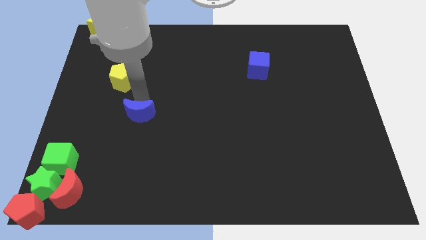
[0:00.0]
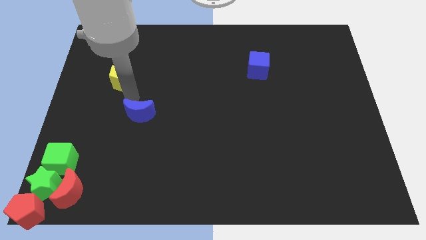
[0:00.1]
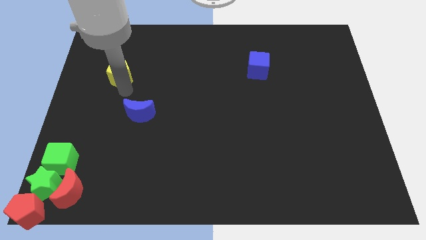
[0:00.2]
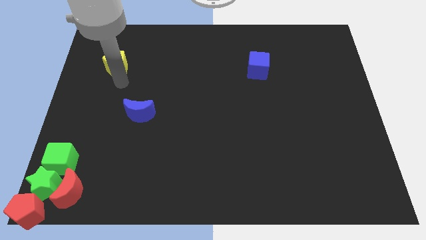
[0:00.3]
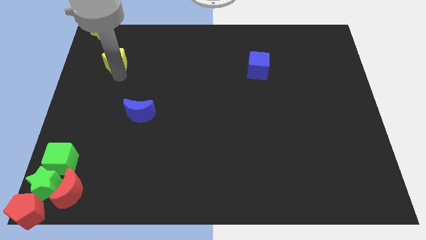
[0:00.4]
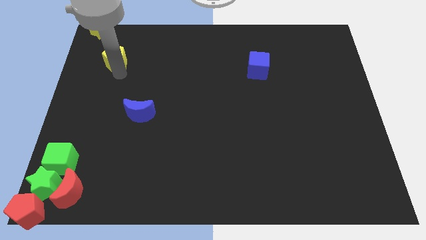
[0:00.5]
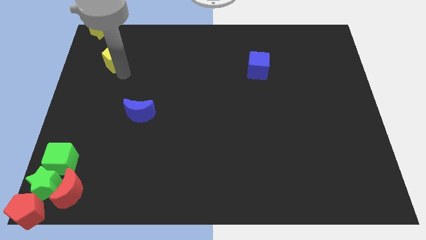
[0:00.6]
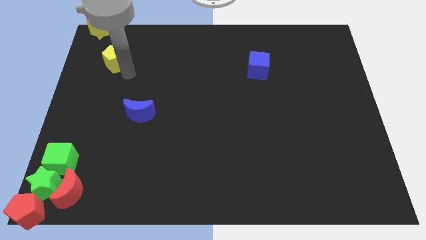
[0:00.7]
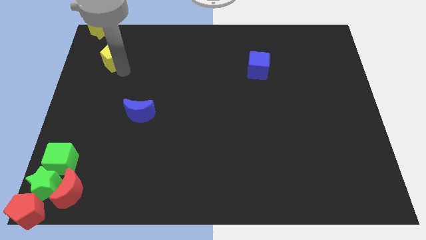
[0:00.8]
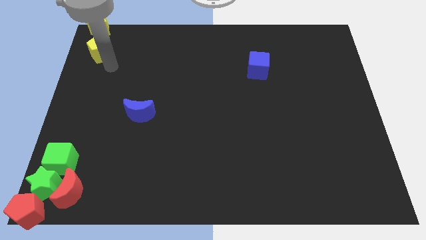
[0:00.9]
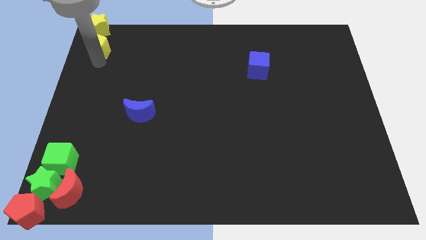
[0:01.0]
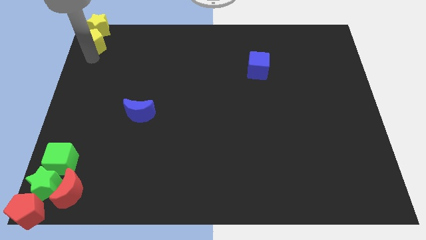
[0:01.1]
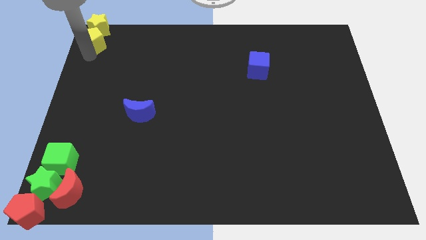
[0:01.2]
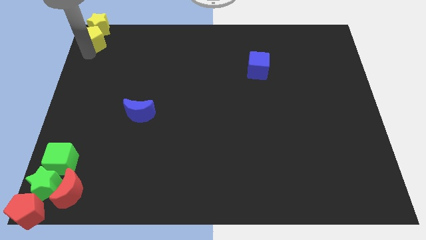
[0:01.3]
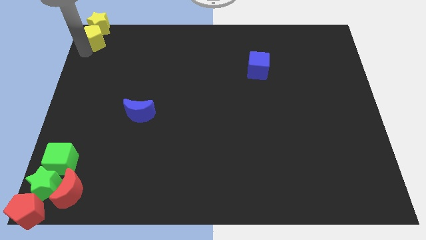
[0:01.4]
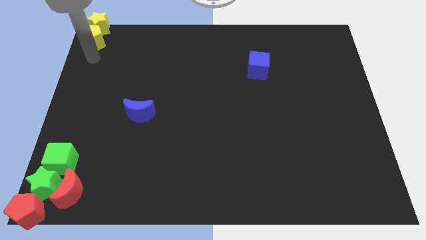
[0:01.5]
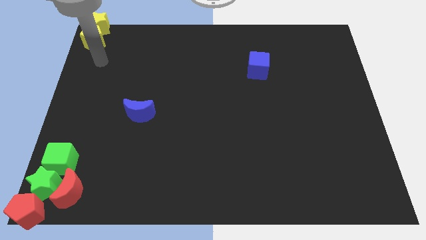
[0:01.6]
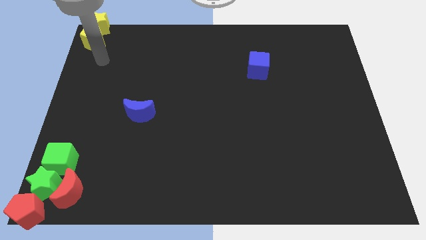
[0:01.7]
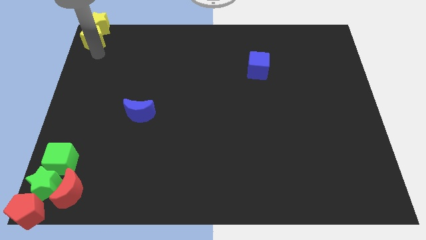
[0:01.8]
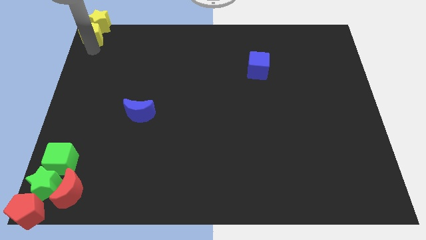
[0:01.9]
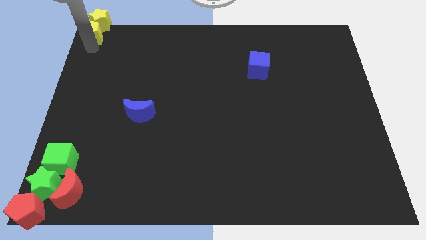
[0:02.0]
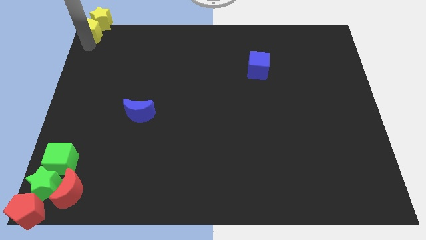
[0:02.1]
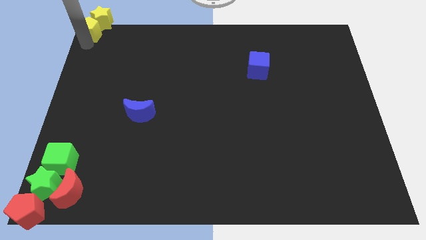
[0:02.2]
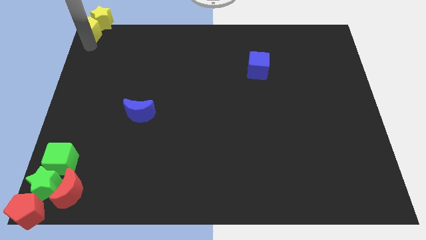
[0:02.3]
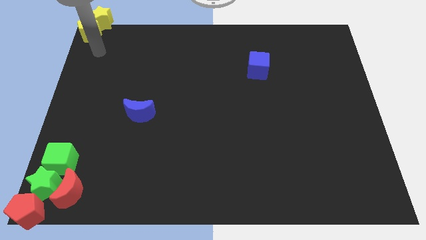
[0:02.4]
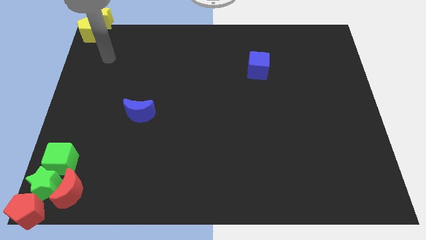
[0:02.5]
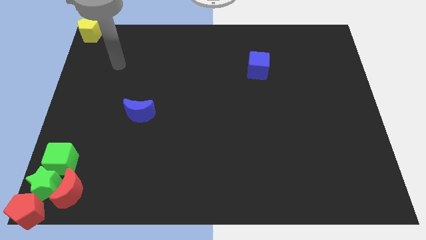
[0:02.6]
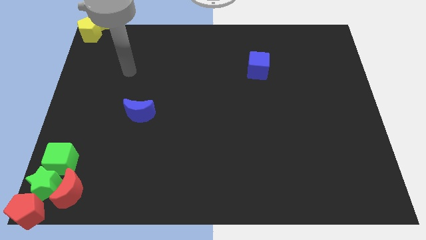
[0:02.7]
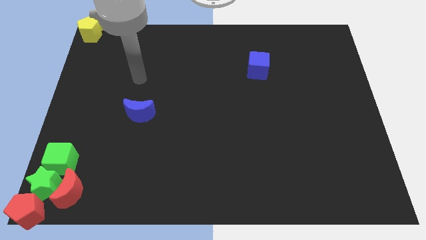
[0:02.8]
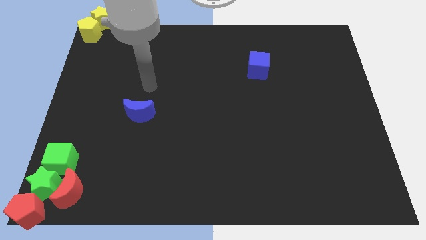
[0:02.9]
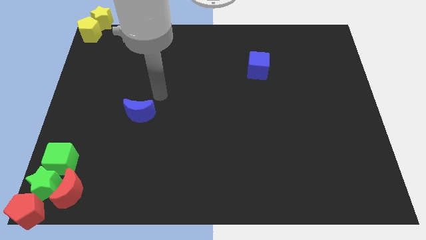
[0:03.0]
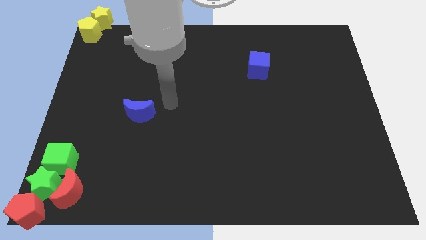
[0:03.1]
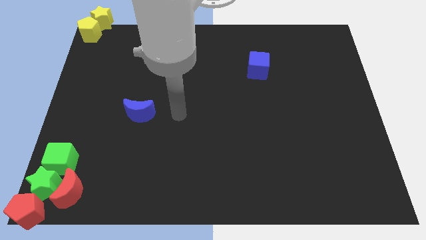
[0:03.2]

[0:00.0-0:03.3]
push the yellow pentagon into the yellow star

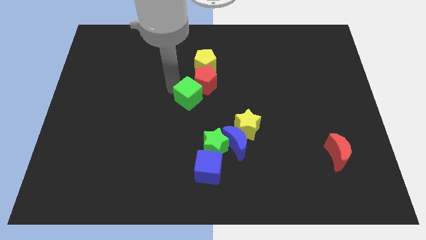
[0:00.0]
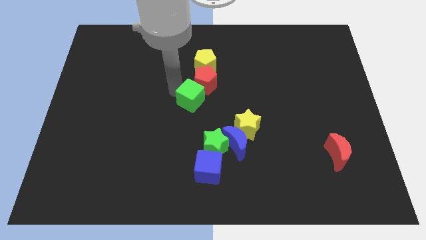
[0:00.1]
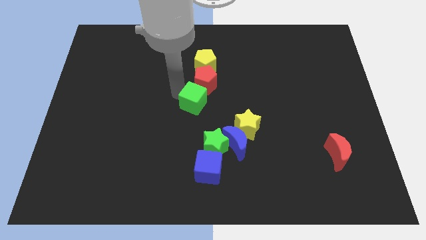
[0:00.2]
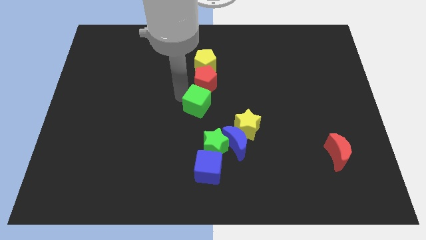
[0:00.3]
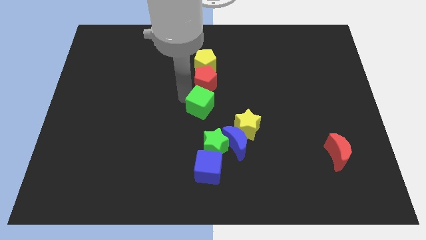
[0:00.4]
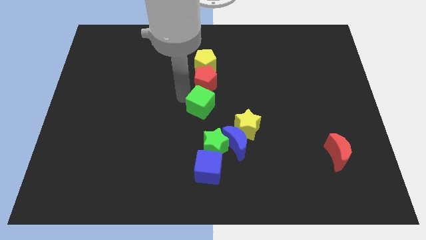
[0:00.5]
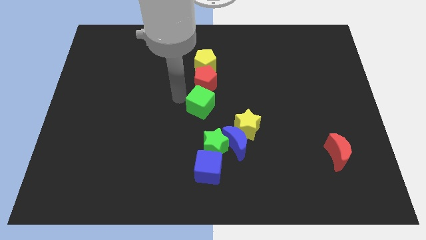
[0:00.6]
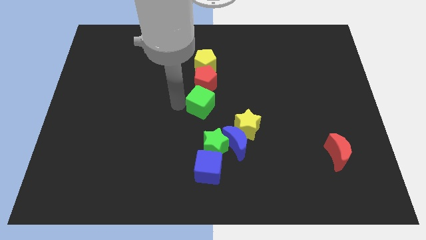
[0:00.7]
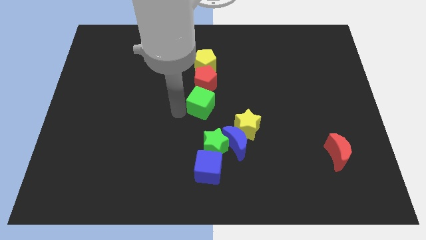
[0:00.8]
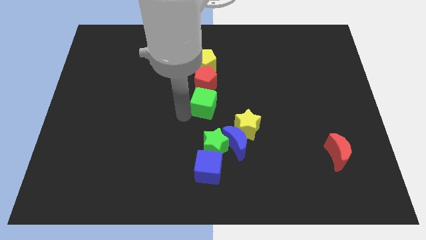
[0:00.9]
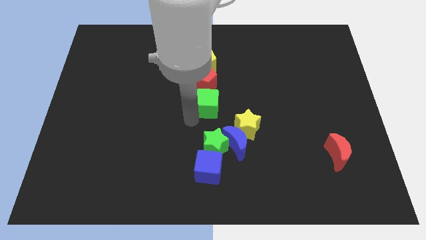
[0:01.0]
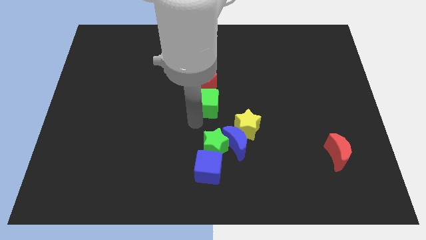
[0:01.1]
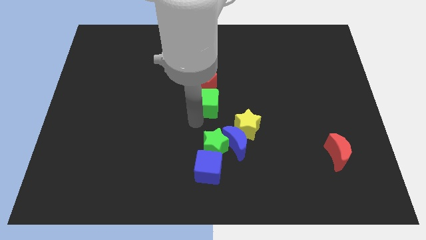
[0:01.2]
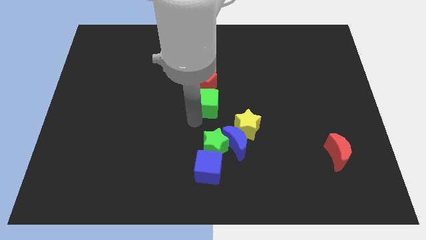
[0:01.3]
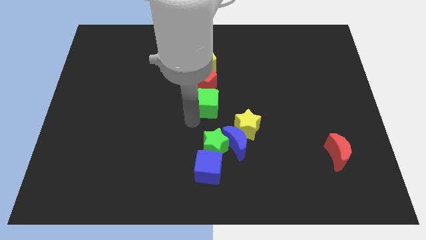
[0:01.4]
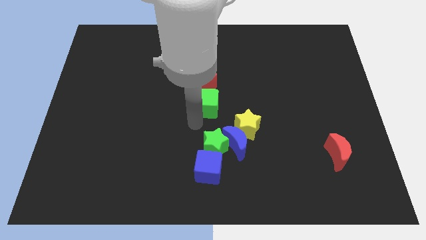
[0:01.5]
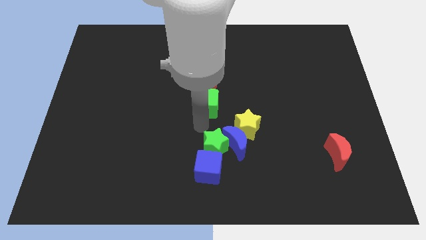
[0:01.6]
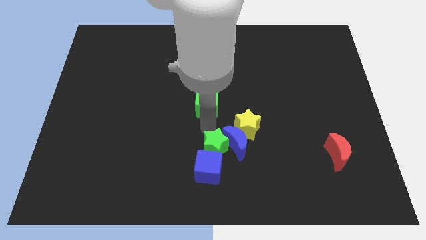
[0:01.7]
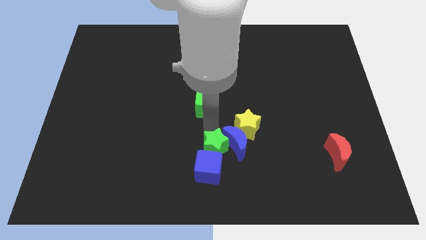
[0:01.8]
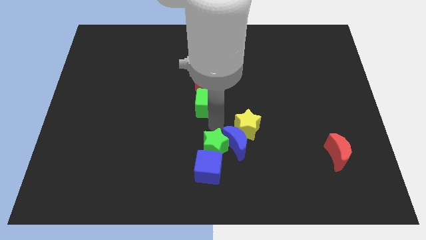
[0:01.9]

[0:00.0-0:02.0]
place green cube to the top of green star

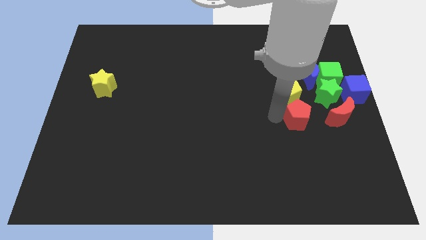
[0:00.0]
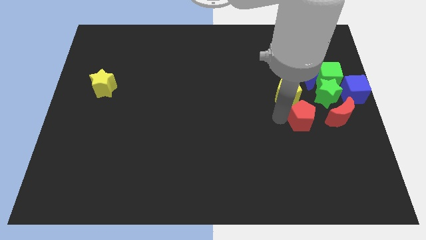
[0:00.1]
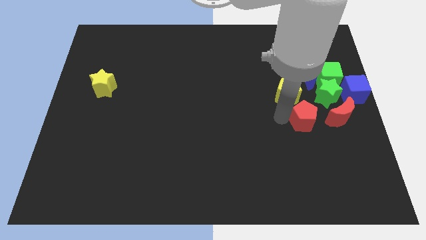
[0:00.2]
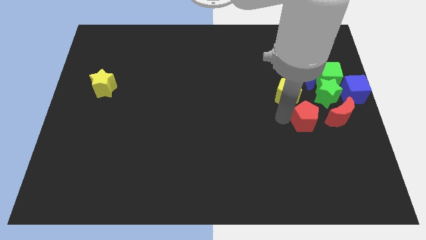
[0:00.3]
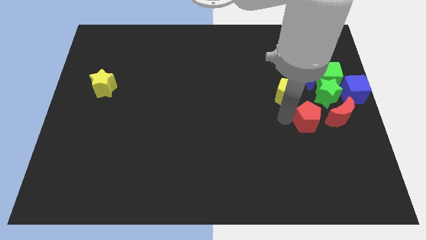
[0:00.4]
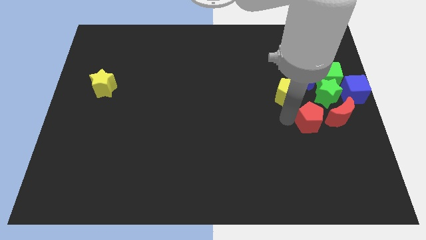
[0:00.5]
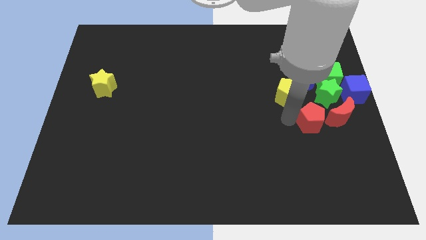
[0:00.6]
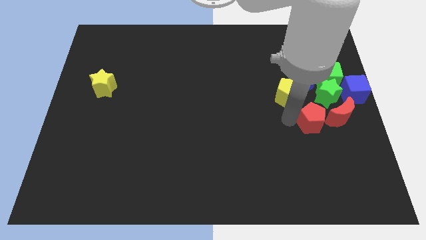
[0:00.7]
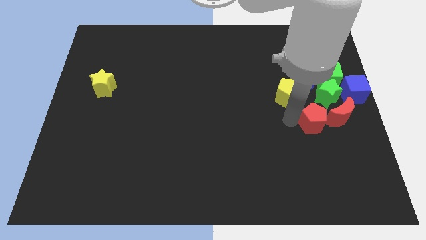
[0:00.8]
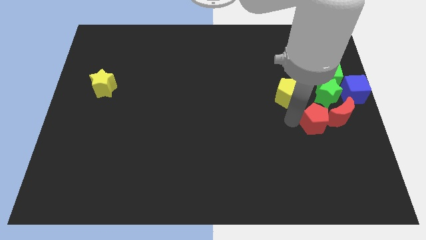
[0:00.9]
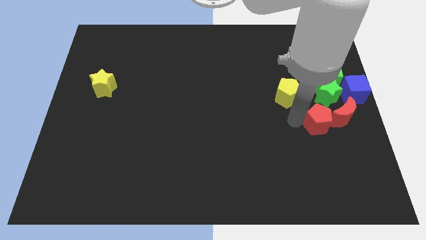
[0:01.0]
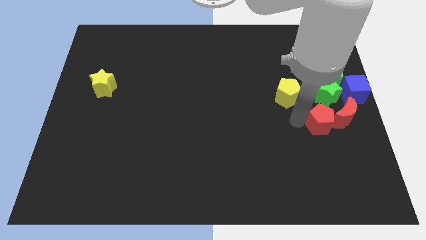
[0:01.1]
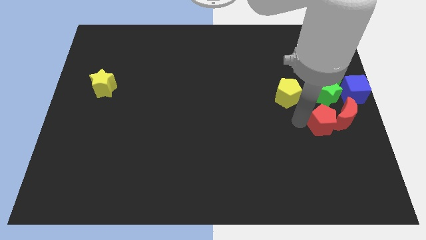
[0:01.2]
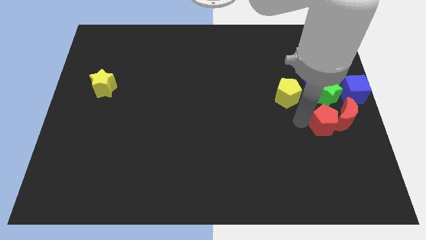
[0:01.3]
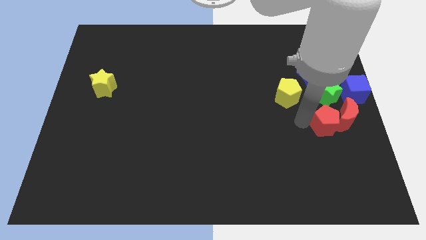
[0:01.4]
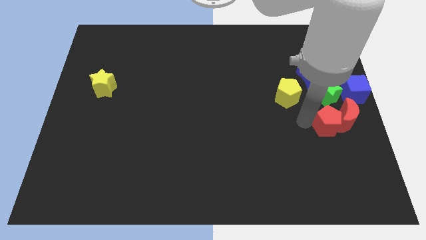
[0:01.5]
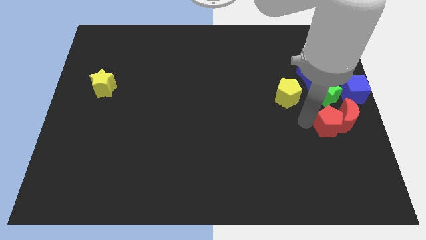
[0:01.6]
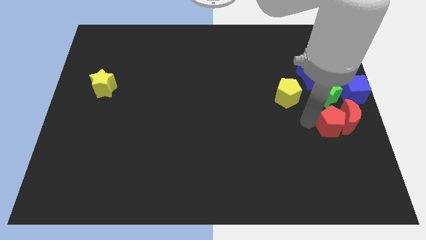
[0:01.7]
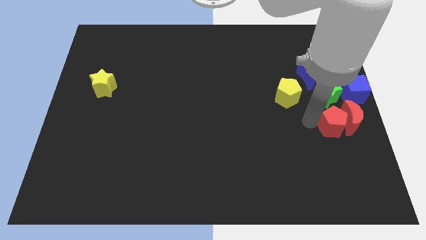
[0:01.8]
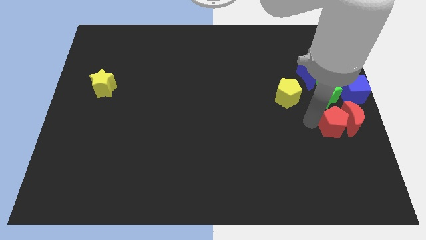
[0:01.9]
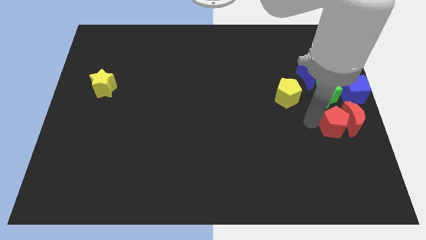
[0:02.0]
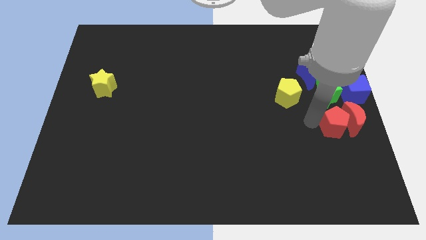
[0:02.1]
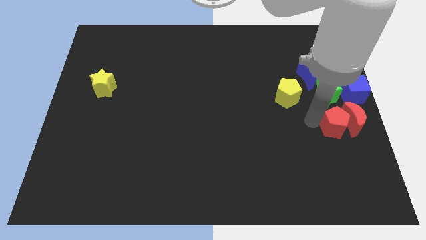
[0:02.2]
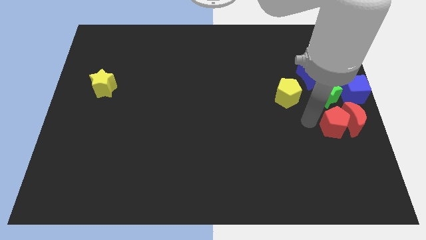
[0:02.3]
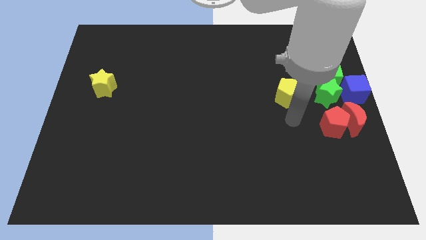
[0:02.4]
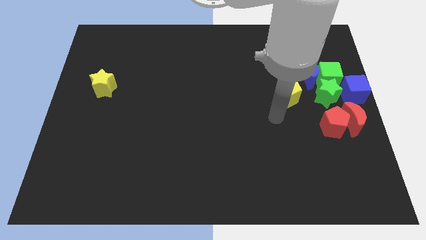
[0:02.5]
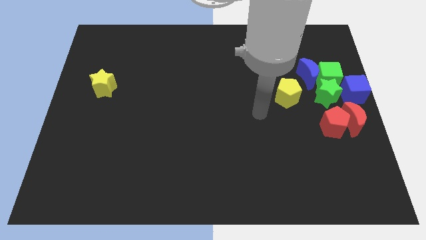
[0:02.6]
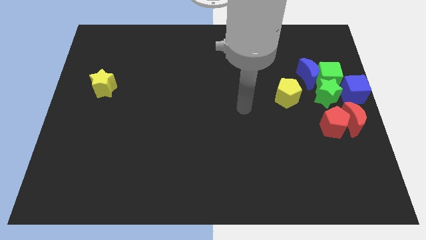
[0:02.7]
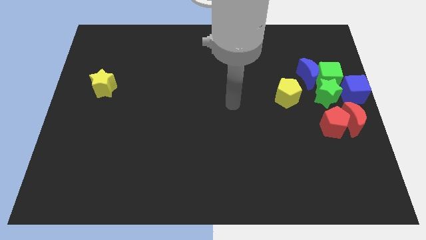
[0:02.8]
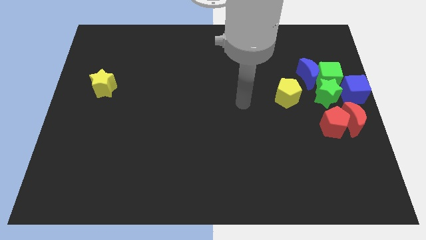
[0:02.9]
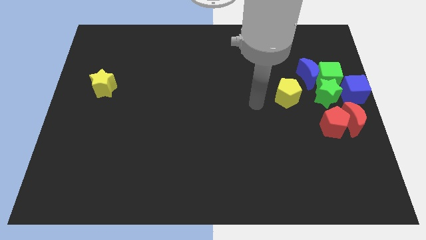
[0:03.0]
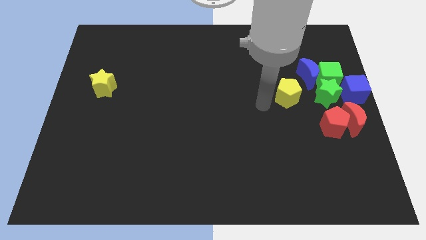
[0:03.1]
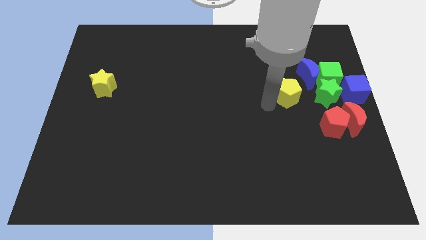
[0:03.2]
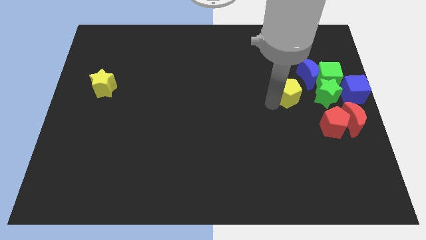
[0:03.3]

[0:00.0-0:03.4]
push the red pentagon into the red moon

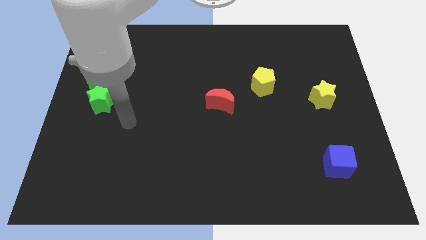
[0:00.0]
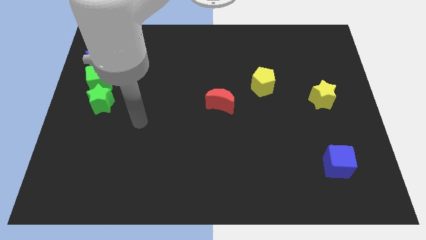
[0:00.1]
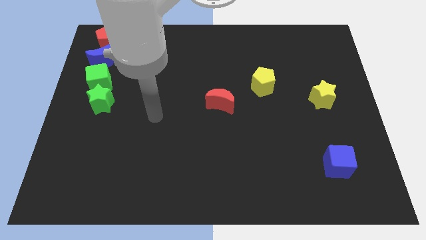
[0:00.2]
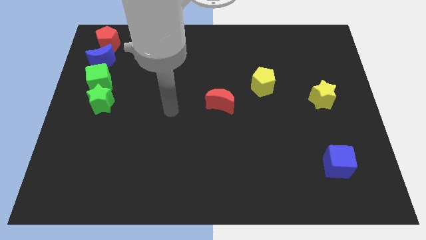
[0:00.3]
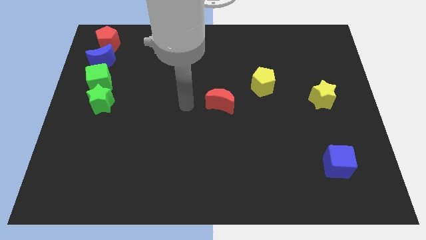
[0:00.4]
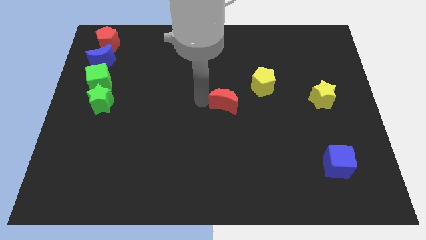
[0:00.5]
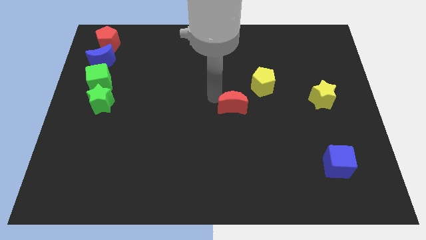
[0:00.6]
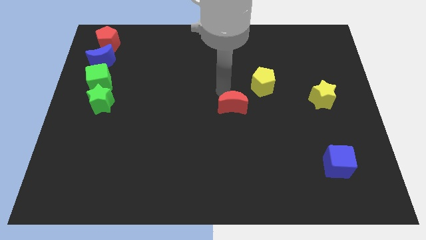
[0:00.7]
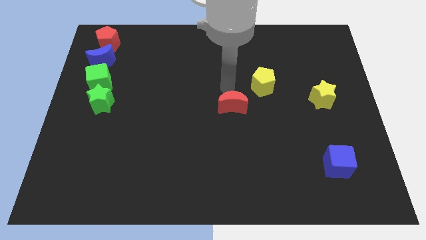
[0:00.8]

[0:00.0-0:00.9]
slightly push the red crescent towards the right side of the board
